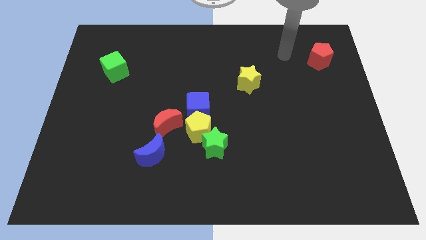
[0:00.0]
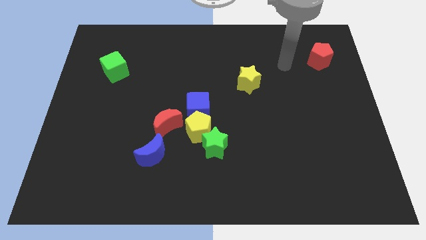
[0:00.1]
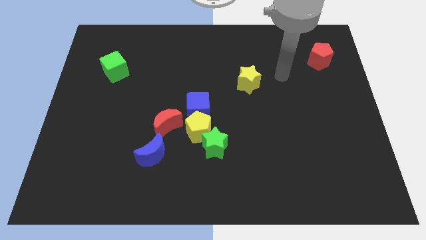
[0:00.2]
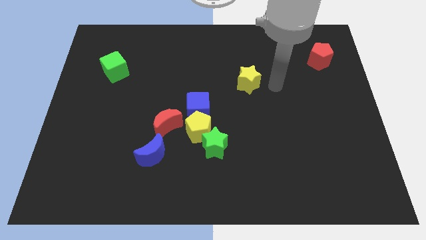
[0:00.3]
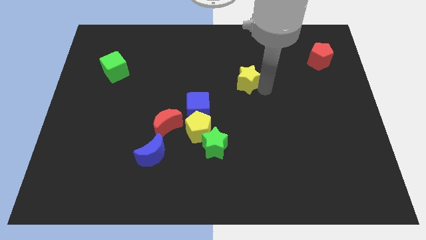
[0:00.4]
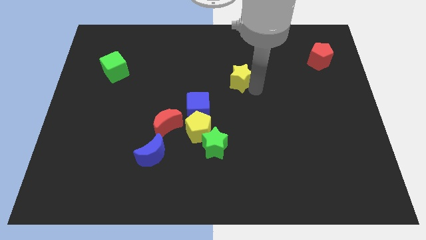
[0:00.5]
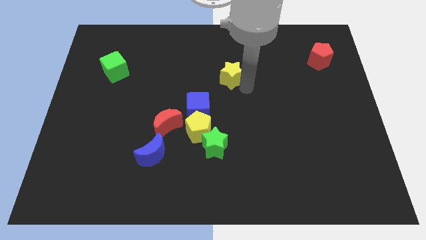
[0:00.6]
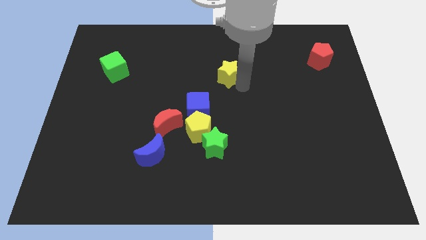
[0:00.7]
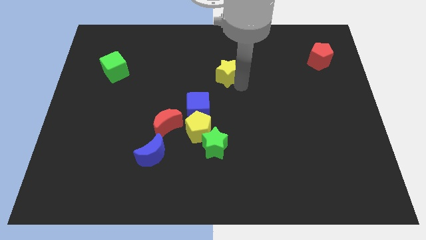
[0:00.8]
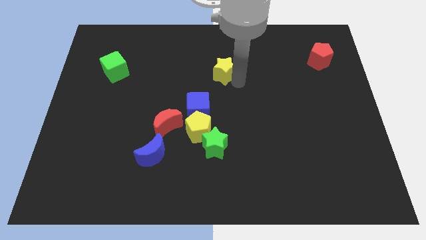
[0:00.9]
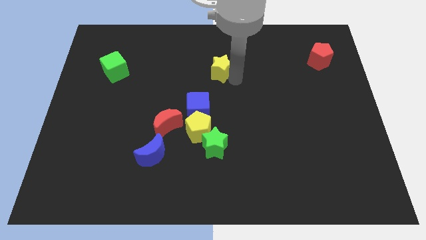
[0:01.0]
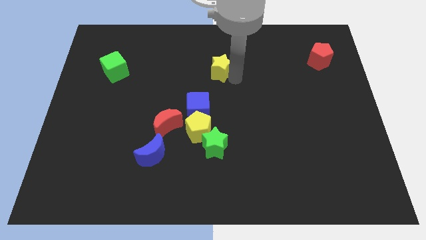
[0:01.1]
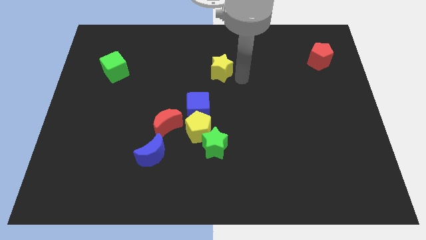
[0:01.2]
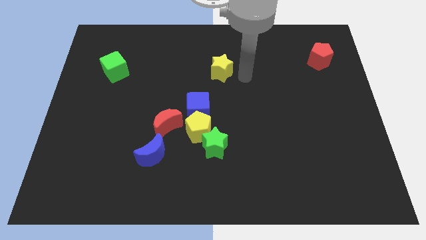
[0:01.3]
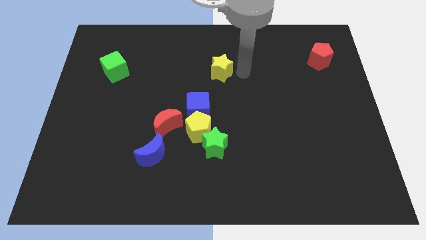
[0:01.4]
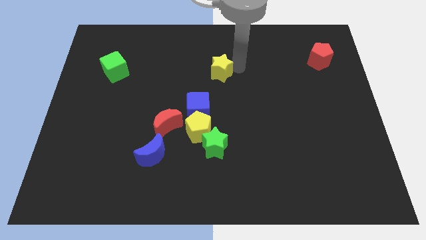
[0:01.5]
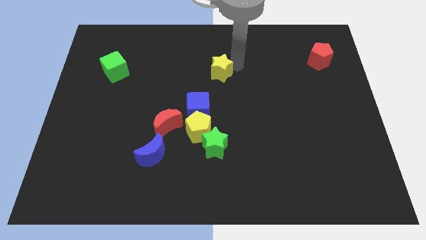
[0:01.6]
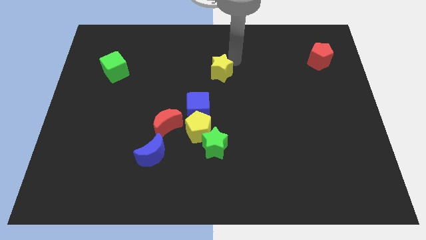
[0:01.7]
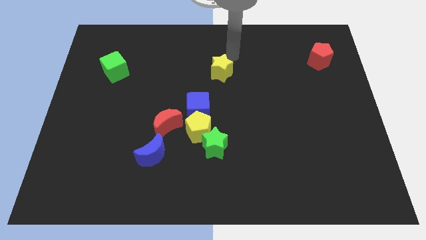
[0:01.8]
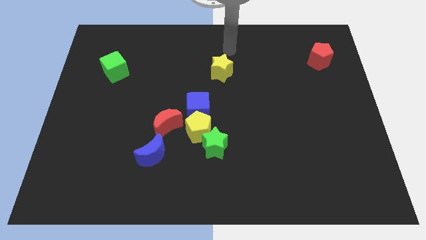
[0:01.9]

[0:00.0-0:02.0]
slide the yellow star to the right side of the green cube

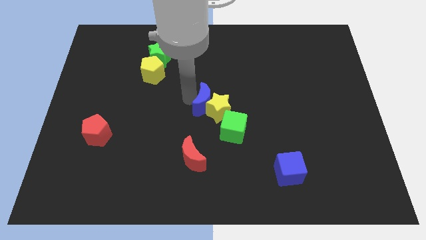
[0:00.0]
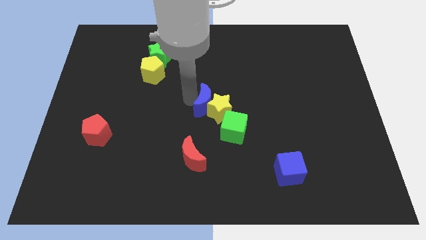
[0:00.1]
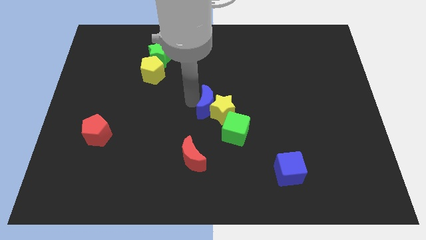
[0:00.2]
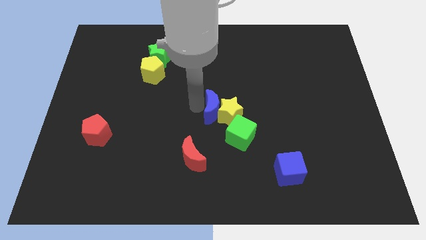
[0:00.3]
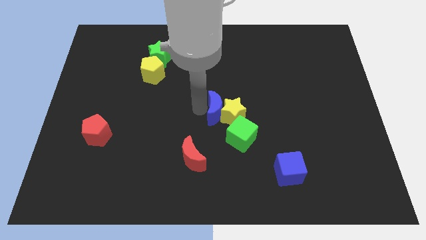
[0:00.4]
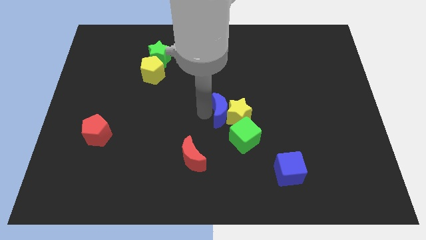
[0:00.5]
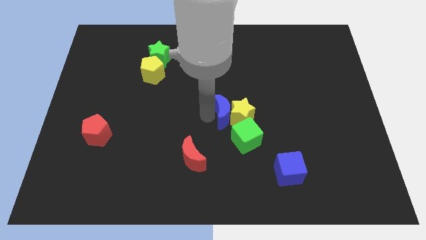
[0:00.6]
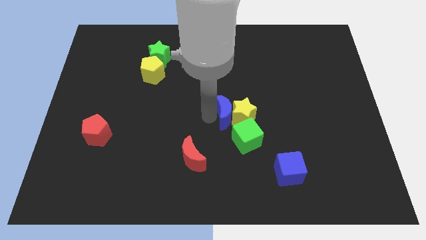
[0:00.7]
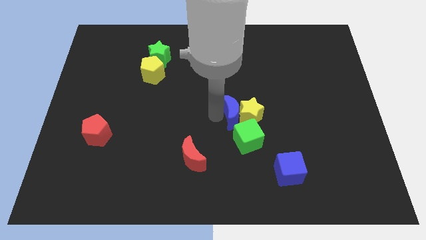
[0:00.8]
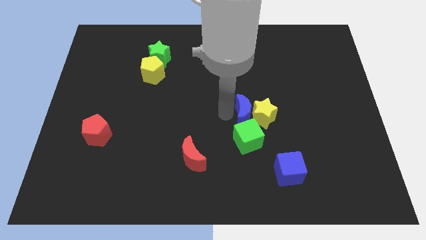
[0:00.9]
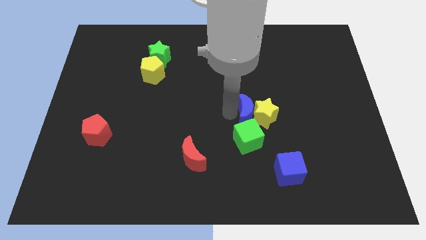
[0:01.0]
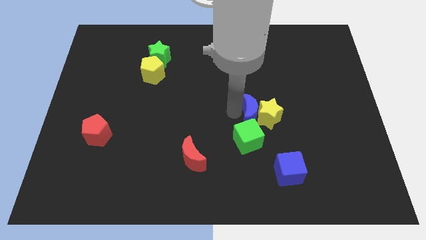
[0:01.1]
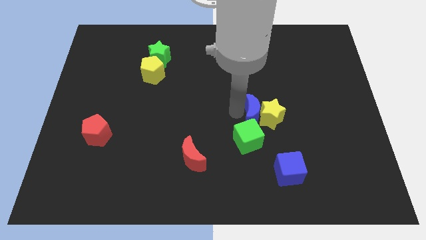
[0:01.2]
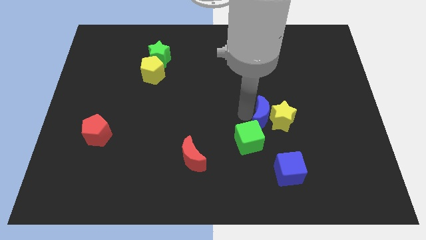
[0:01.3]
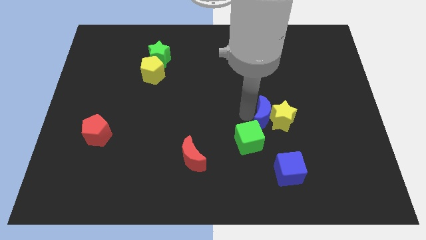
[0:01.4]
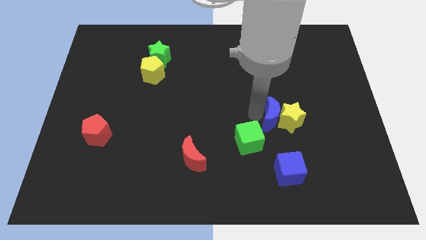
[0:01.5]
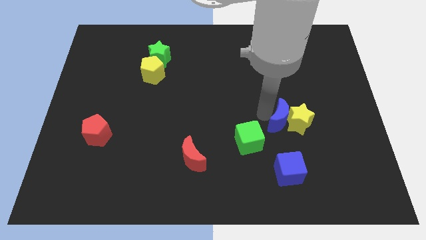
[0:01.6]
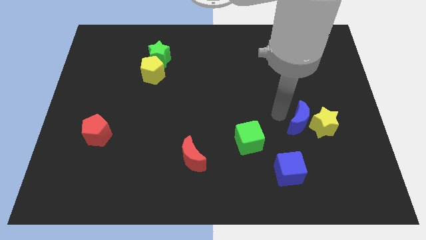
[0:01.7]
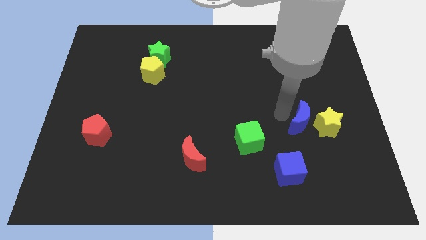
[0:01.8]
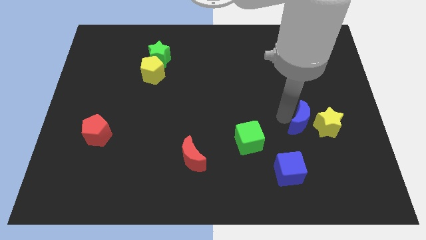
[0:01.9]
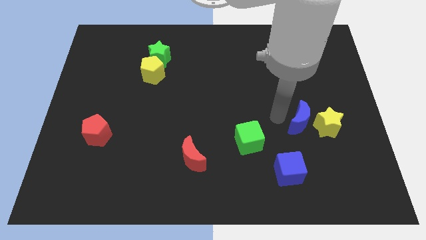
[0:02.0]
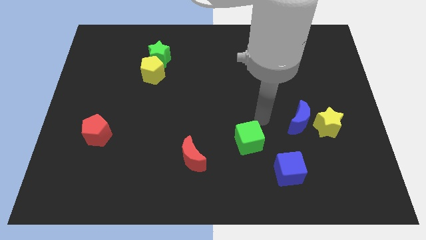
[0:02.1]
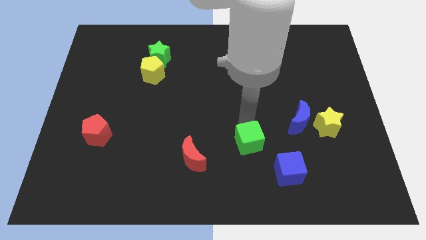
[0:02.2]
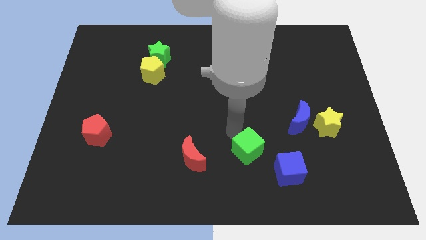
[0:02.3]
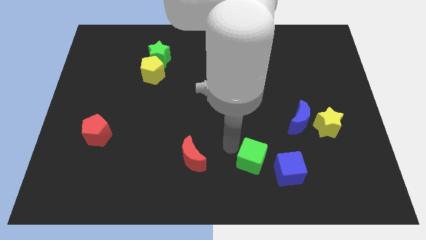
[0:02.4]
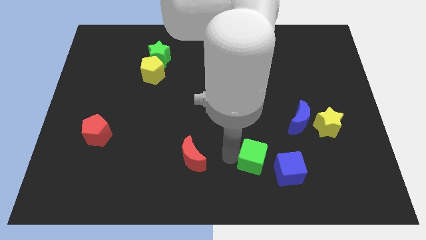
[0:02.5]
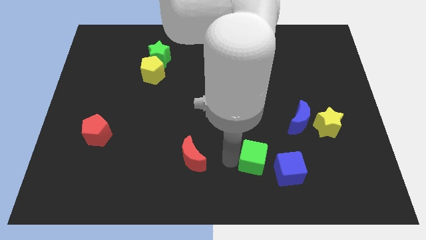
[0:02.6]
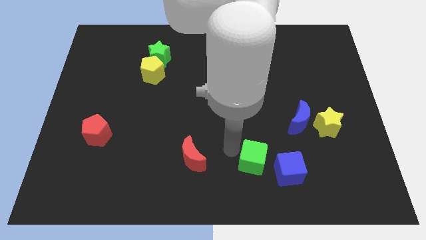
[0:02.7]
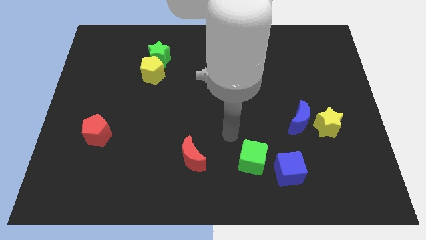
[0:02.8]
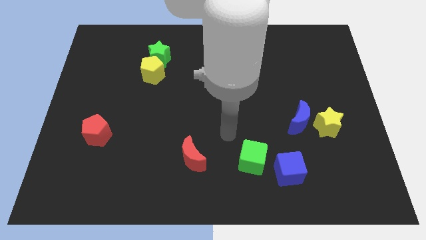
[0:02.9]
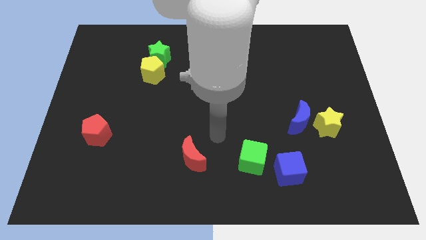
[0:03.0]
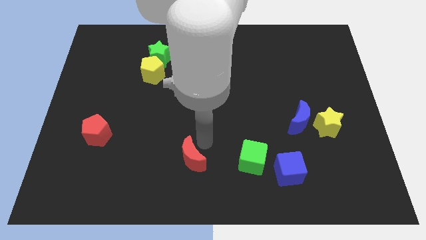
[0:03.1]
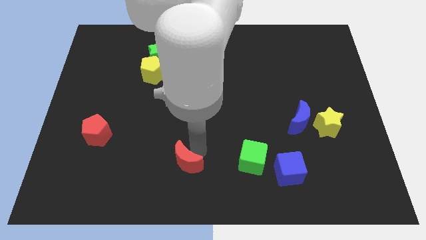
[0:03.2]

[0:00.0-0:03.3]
move the green cube to the left of the blue cube

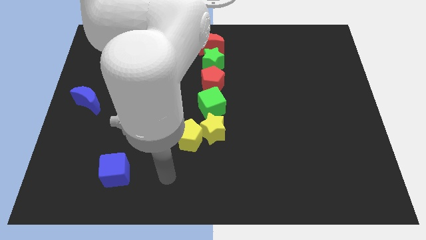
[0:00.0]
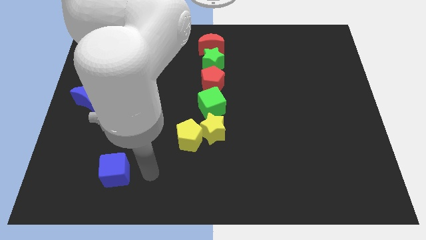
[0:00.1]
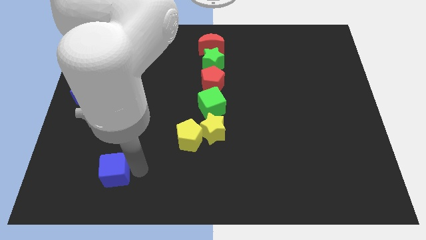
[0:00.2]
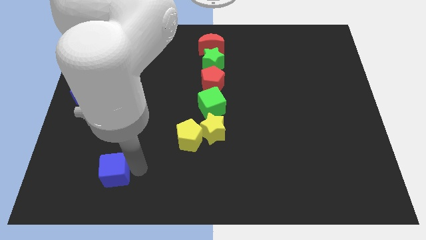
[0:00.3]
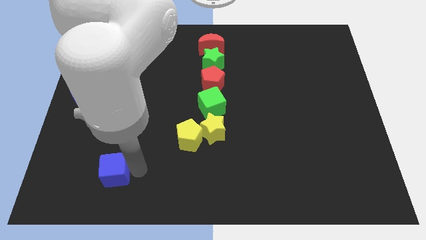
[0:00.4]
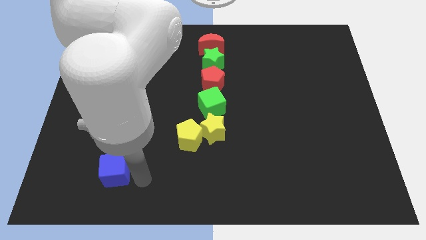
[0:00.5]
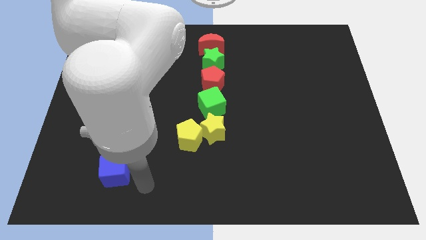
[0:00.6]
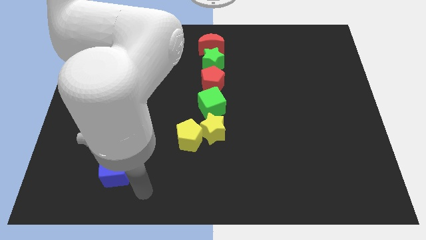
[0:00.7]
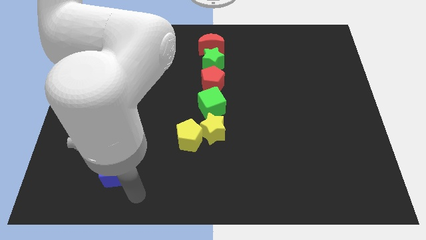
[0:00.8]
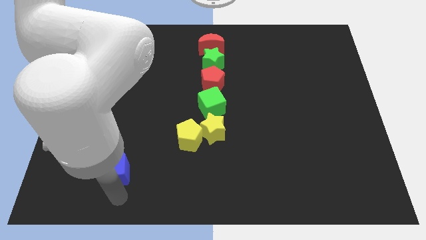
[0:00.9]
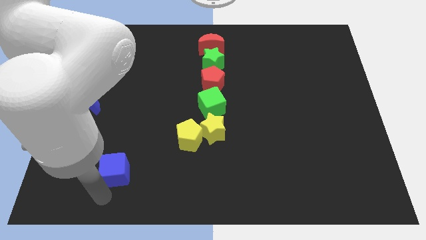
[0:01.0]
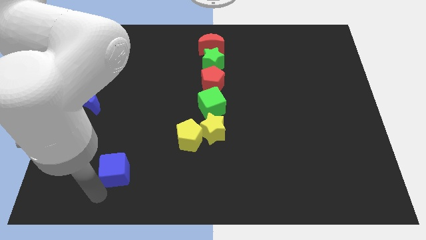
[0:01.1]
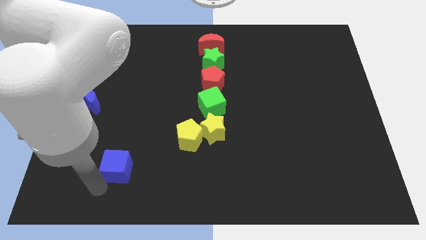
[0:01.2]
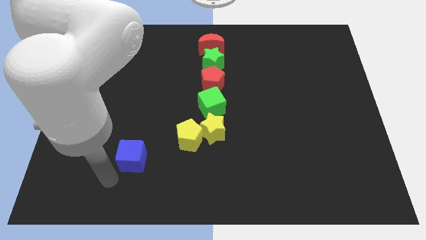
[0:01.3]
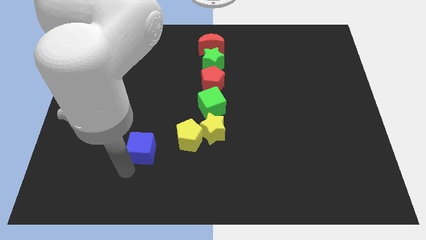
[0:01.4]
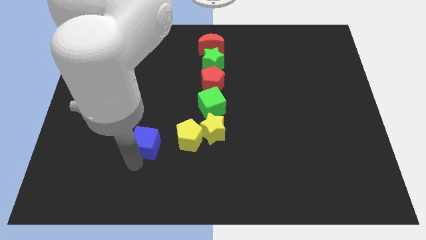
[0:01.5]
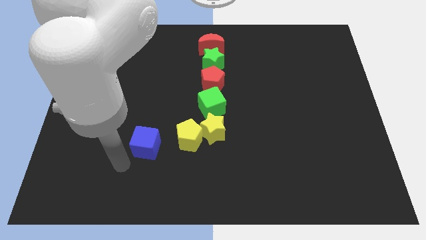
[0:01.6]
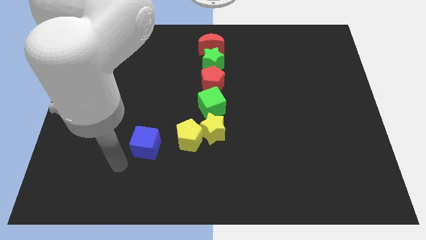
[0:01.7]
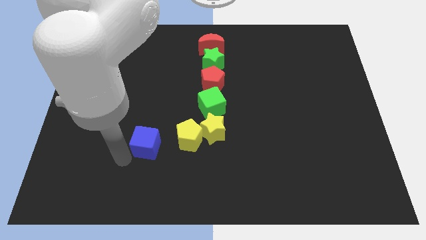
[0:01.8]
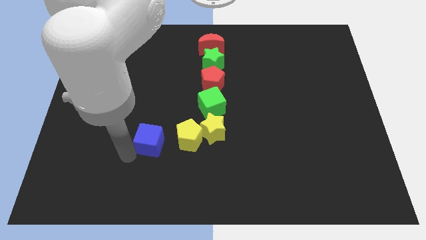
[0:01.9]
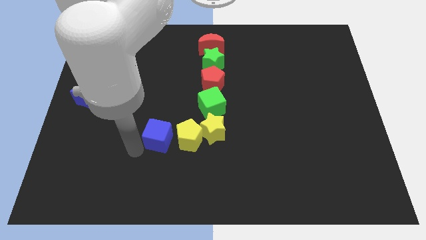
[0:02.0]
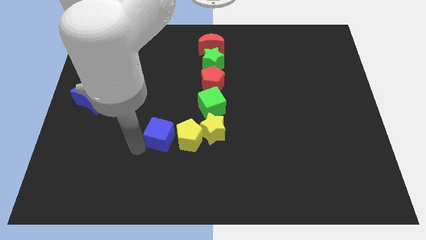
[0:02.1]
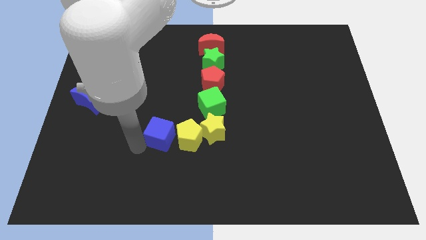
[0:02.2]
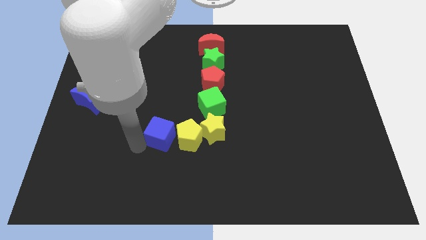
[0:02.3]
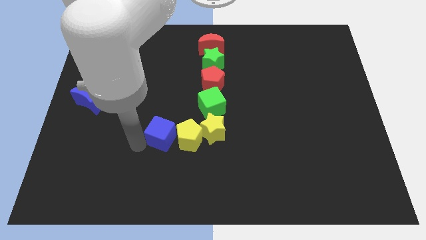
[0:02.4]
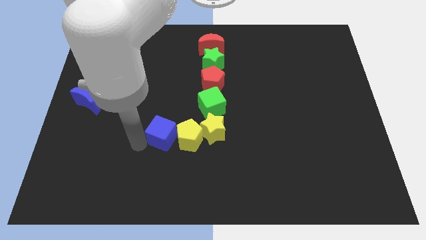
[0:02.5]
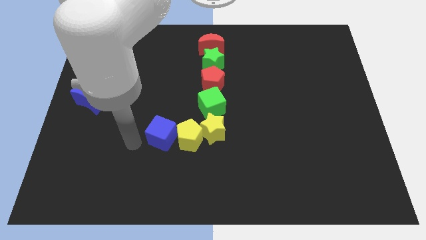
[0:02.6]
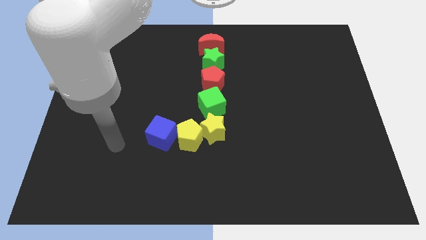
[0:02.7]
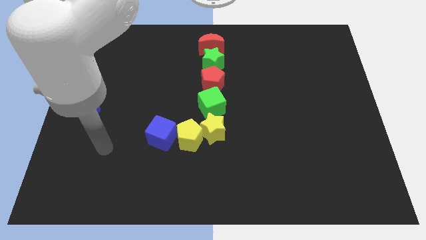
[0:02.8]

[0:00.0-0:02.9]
place the blue cube to the left side of the yellow pentagon

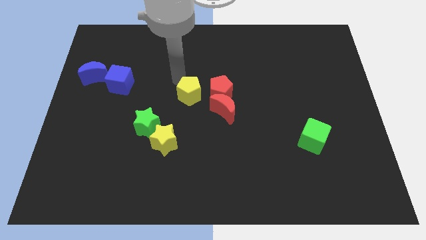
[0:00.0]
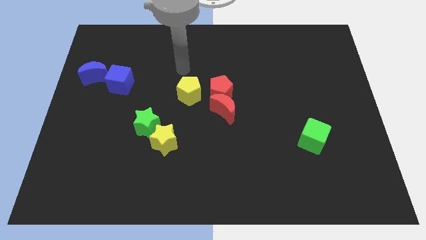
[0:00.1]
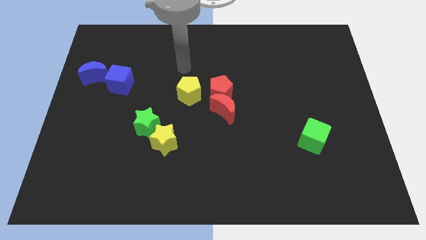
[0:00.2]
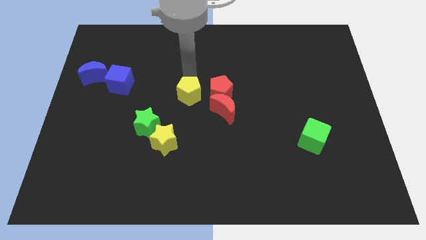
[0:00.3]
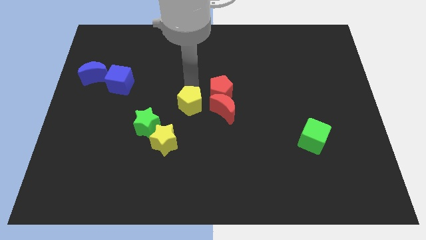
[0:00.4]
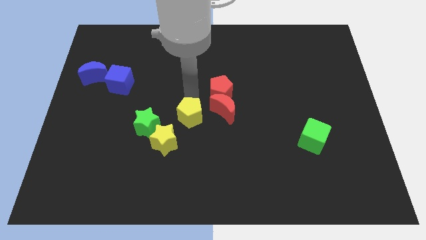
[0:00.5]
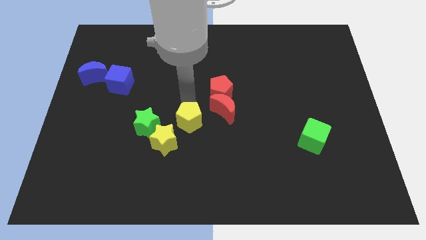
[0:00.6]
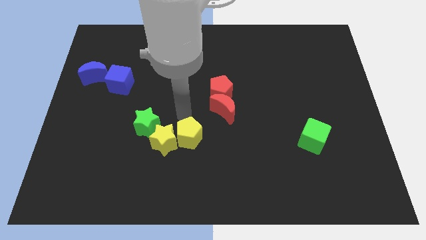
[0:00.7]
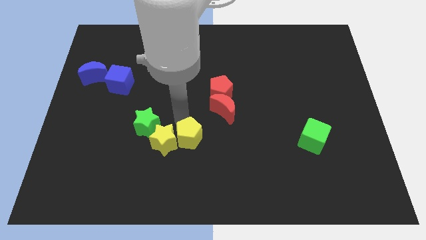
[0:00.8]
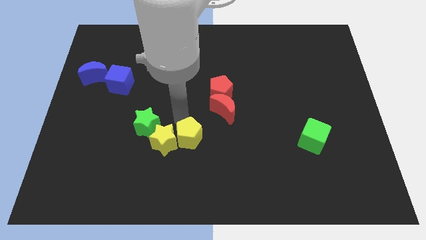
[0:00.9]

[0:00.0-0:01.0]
place the yellow pentagon to the right side of the yellow star
